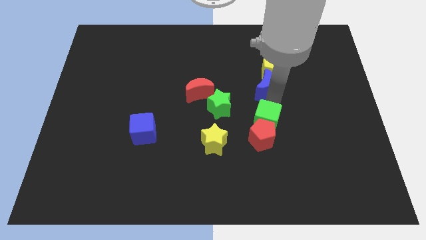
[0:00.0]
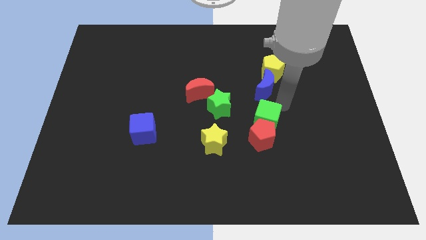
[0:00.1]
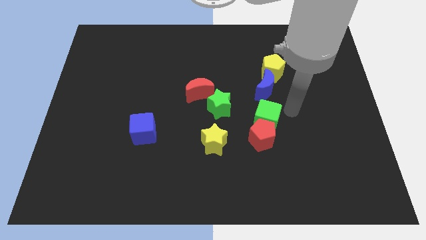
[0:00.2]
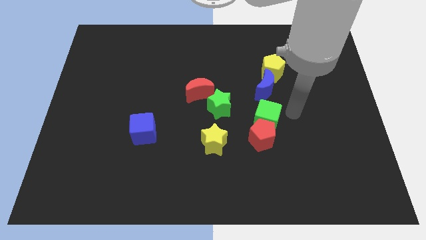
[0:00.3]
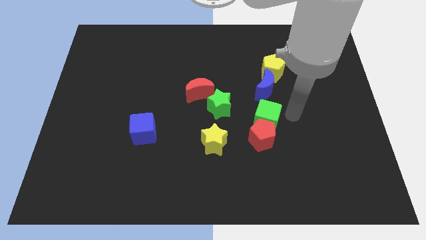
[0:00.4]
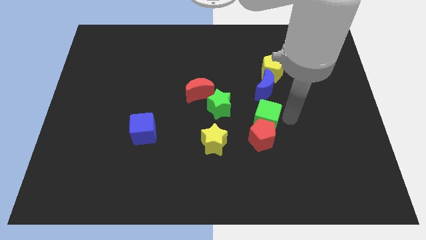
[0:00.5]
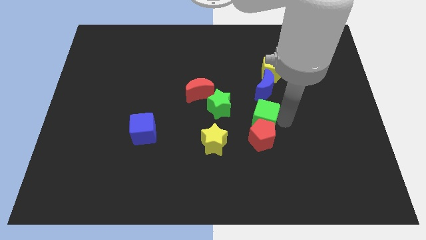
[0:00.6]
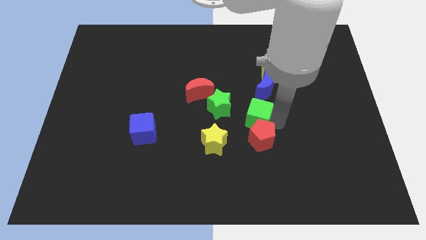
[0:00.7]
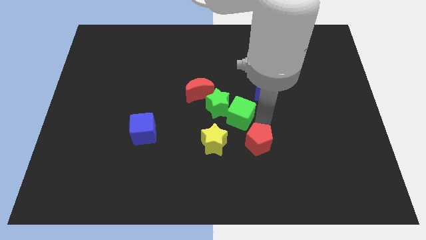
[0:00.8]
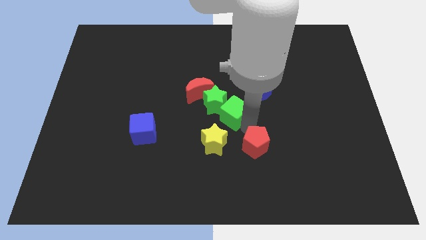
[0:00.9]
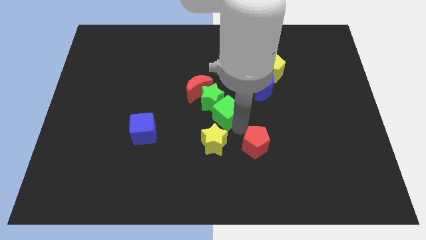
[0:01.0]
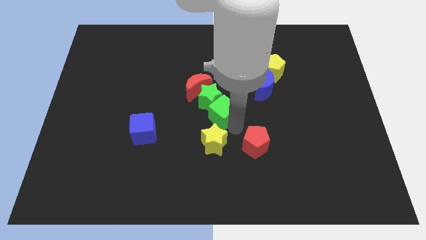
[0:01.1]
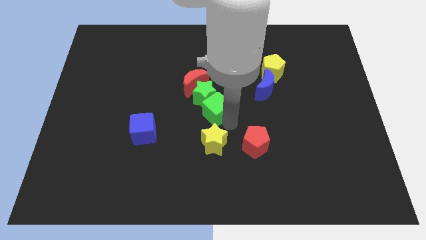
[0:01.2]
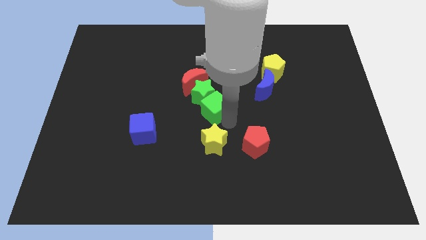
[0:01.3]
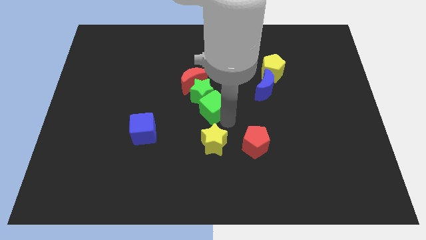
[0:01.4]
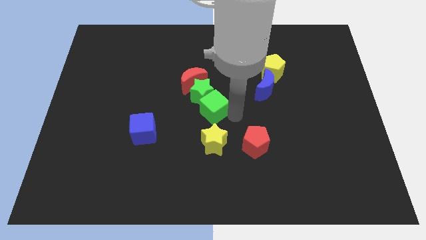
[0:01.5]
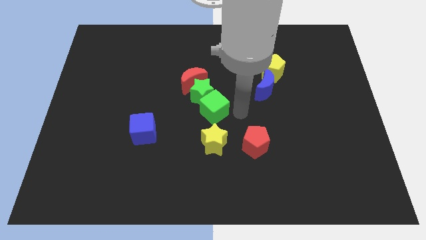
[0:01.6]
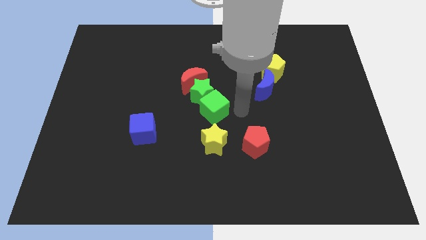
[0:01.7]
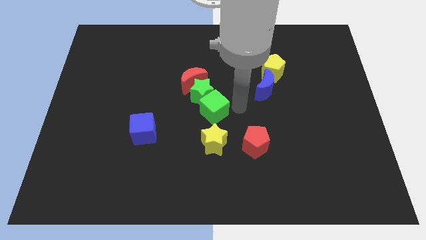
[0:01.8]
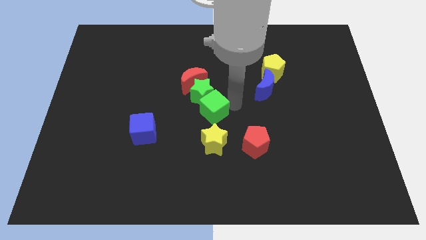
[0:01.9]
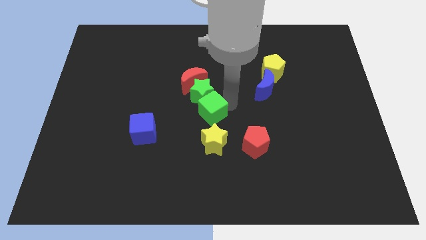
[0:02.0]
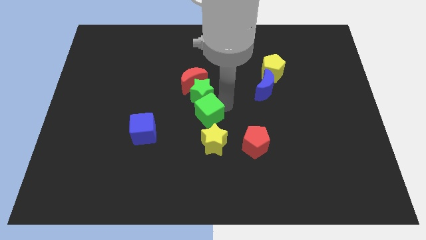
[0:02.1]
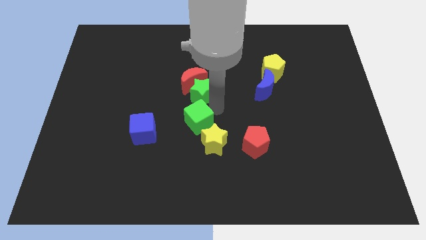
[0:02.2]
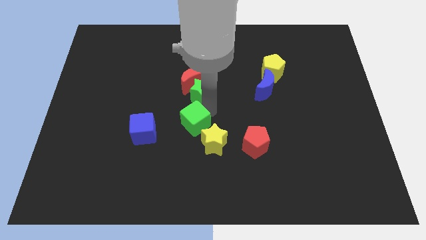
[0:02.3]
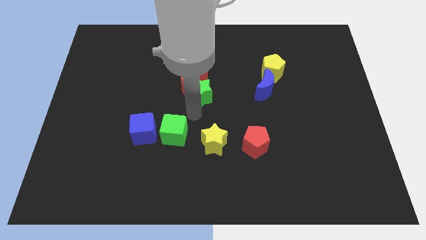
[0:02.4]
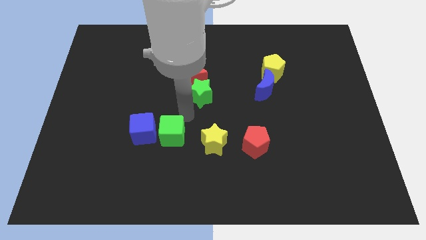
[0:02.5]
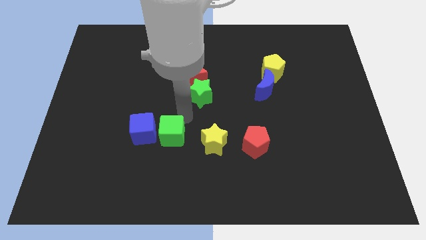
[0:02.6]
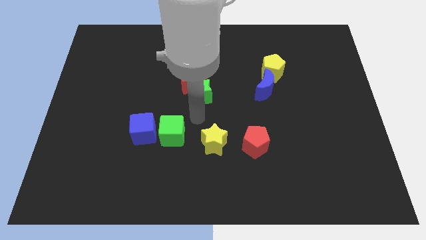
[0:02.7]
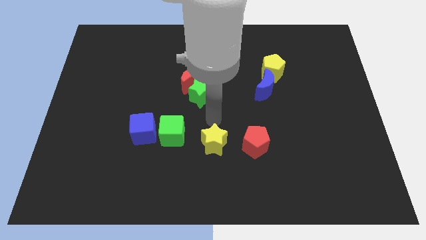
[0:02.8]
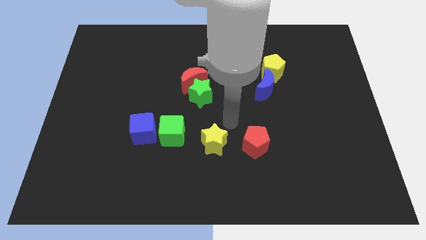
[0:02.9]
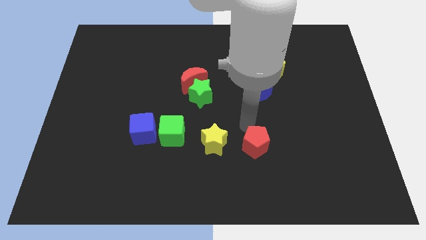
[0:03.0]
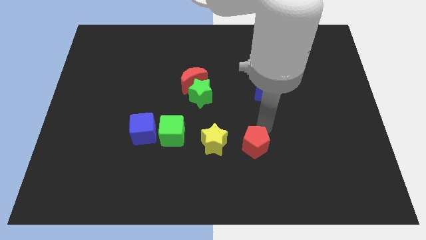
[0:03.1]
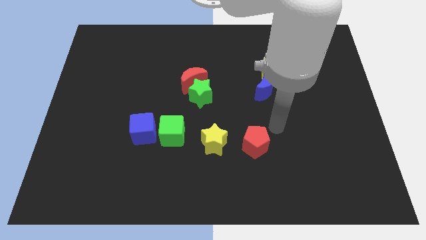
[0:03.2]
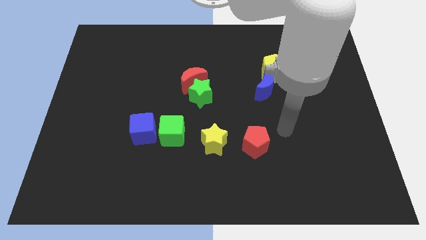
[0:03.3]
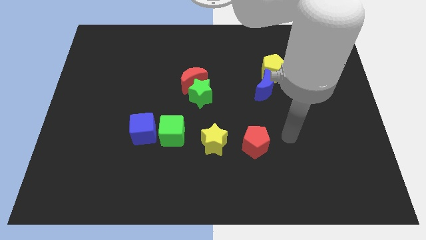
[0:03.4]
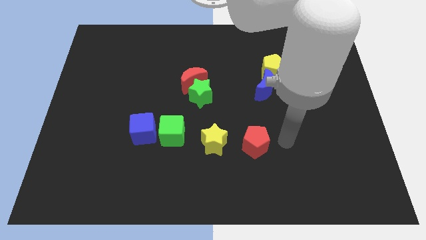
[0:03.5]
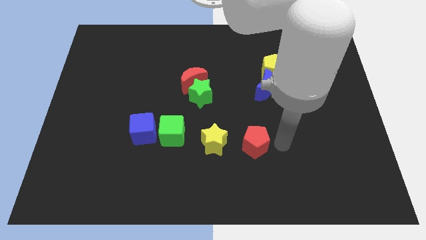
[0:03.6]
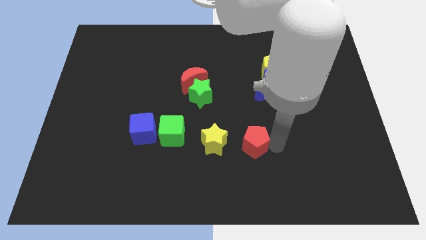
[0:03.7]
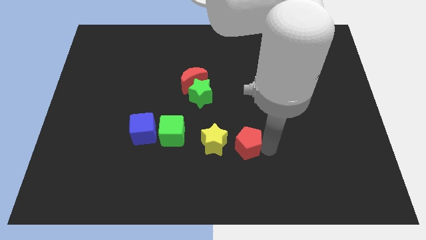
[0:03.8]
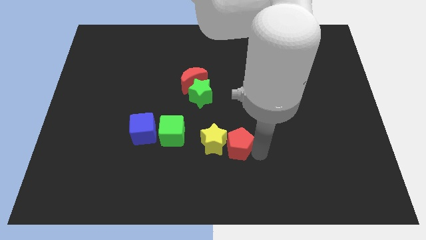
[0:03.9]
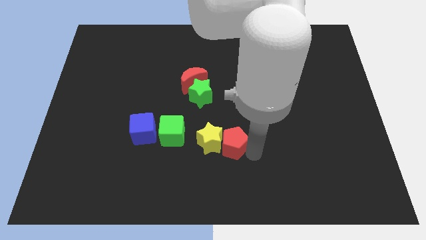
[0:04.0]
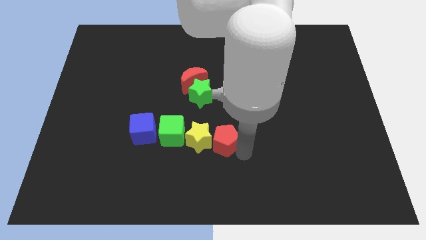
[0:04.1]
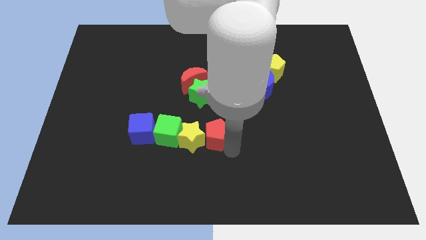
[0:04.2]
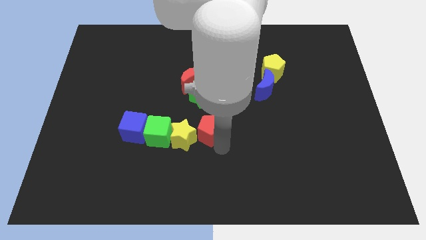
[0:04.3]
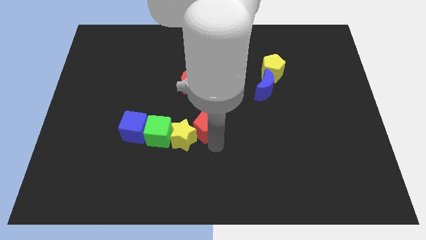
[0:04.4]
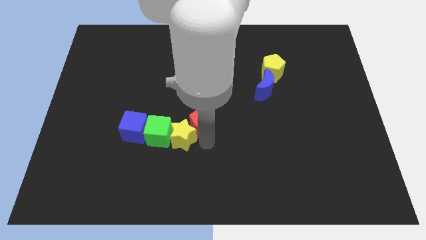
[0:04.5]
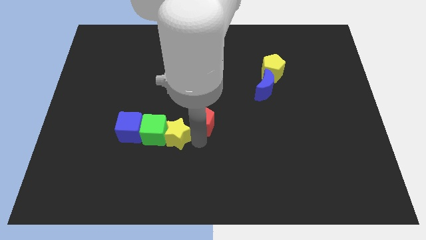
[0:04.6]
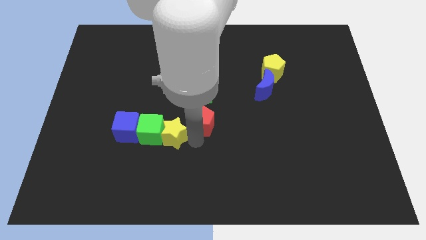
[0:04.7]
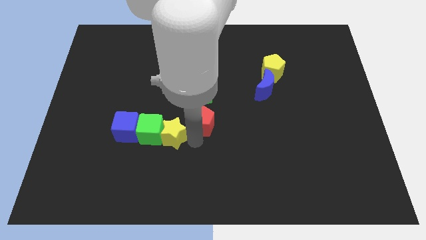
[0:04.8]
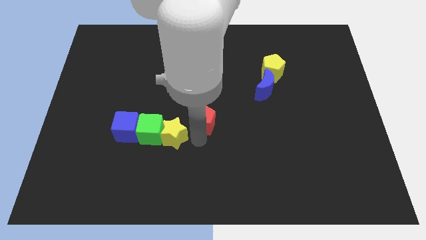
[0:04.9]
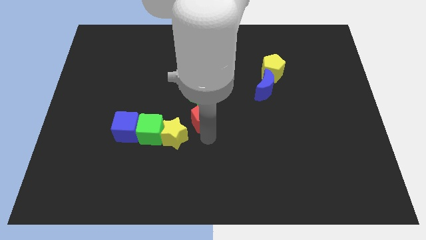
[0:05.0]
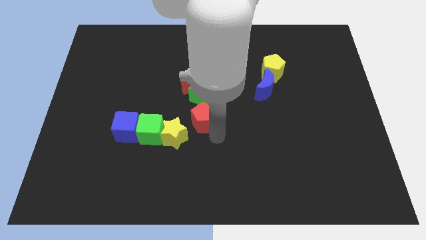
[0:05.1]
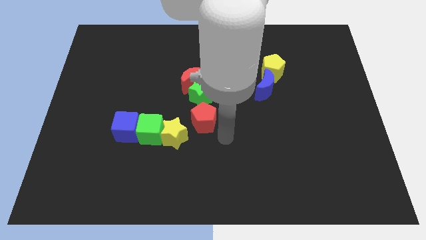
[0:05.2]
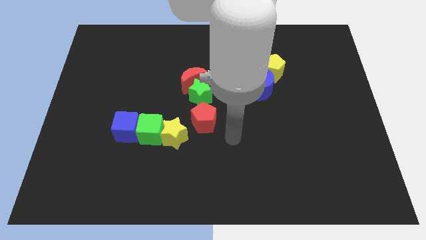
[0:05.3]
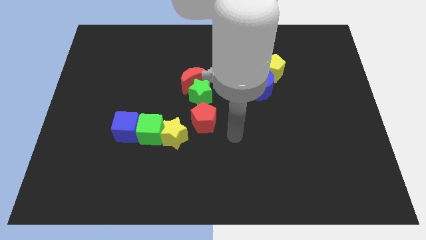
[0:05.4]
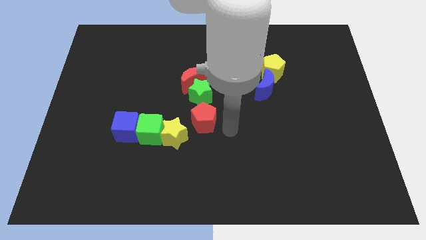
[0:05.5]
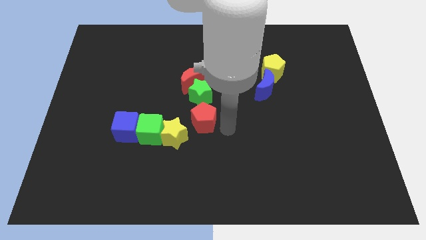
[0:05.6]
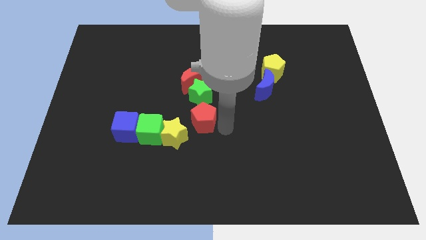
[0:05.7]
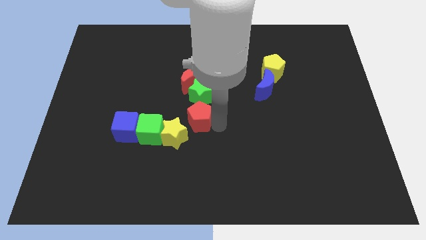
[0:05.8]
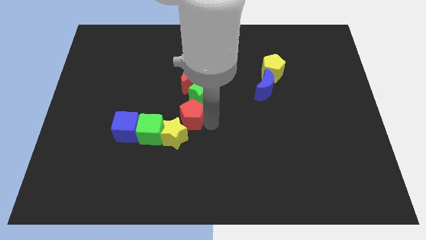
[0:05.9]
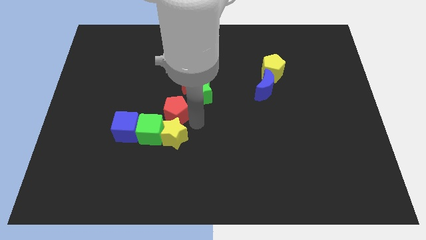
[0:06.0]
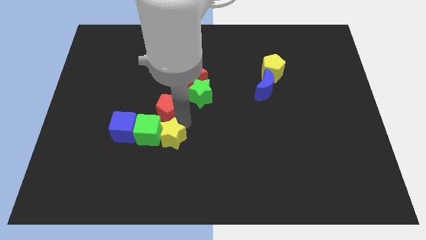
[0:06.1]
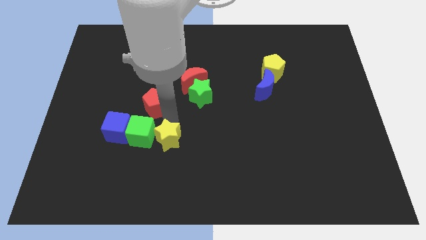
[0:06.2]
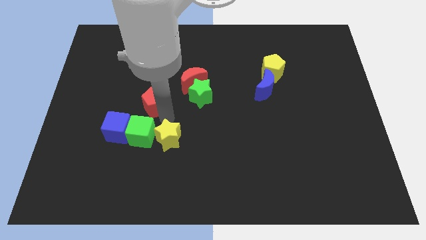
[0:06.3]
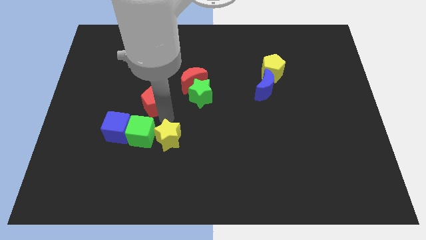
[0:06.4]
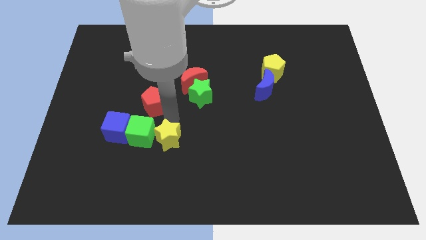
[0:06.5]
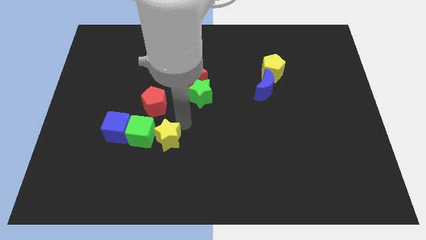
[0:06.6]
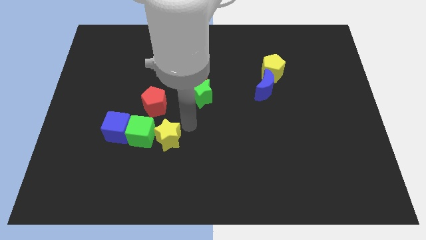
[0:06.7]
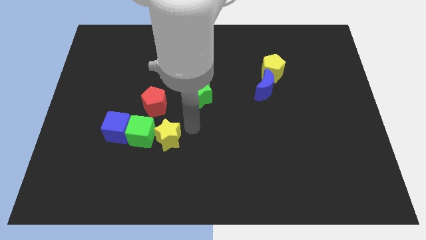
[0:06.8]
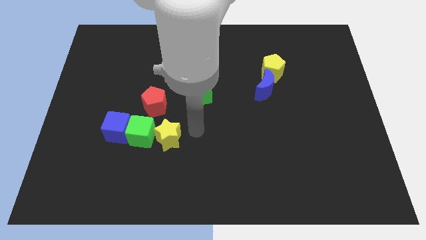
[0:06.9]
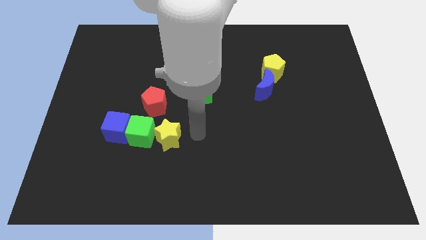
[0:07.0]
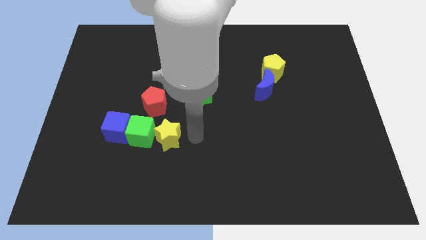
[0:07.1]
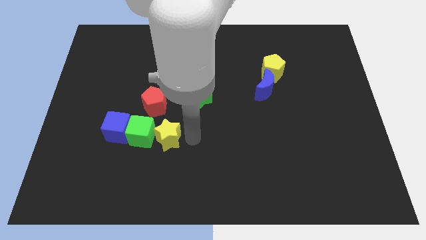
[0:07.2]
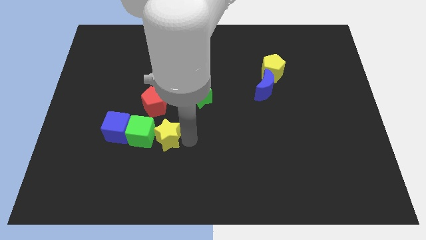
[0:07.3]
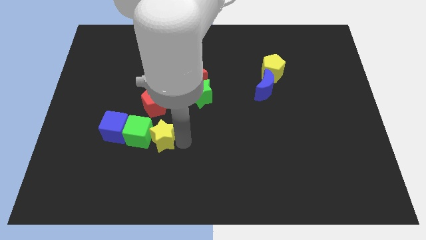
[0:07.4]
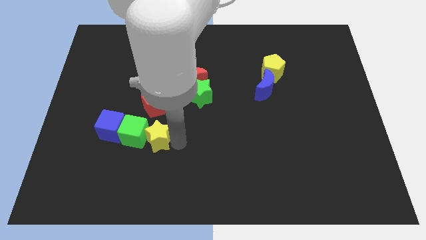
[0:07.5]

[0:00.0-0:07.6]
push a group of blocks to the left sidea

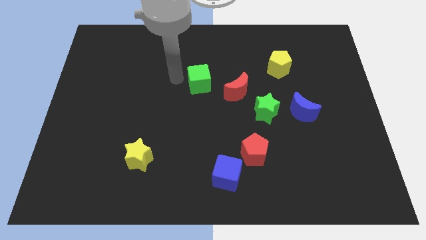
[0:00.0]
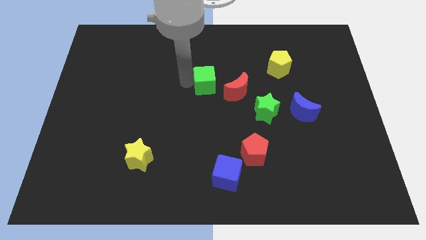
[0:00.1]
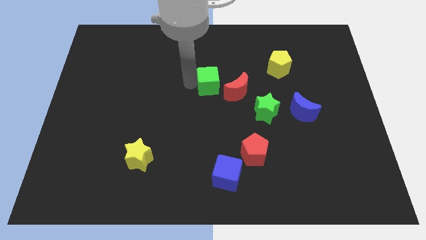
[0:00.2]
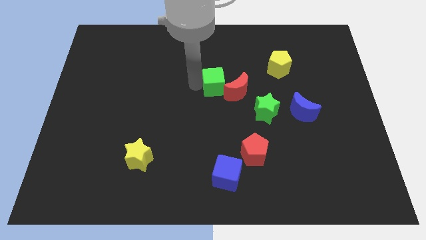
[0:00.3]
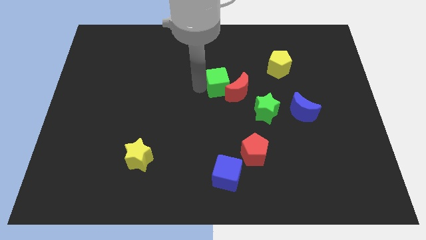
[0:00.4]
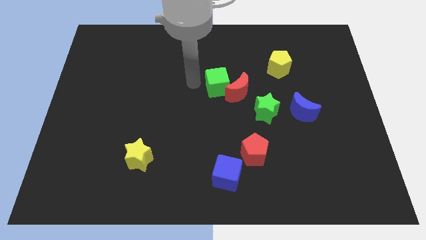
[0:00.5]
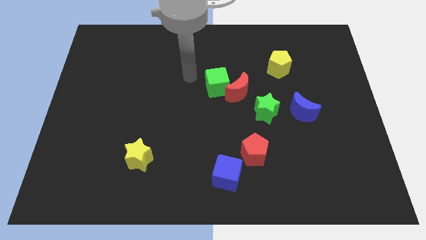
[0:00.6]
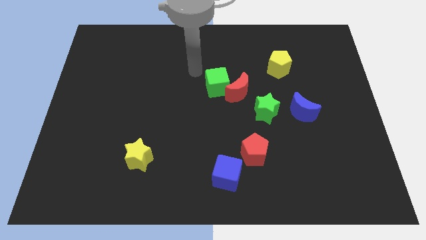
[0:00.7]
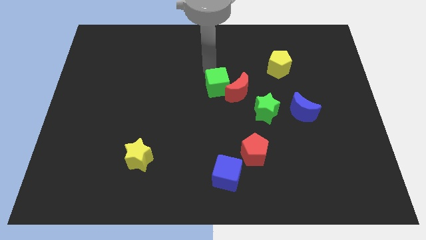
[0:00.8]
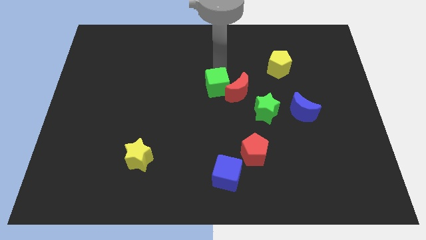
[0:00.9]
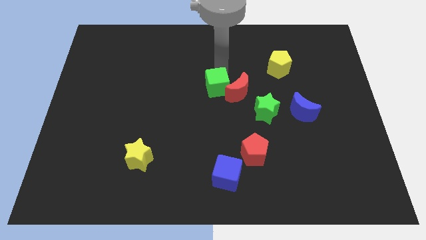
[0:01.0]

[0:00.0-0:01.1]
slide green cube into red moon

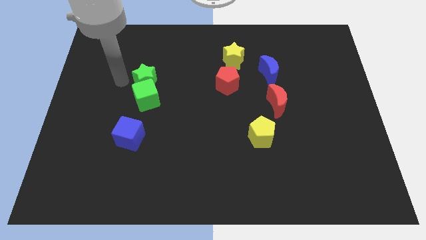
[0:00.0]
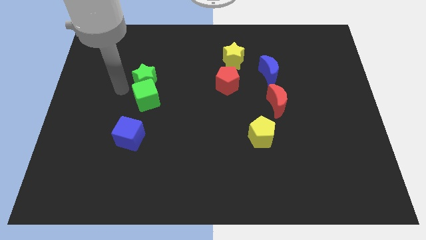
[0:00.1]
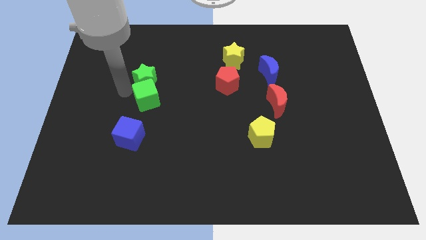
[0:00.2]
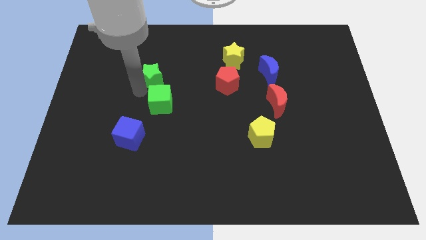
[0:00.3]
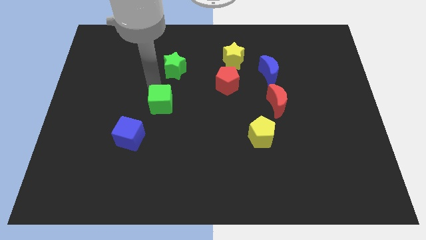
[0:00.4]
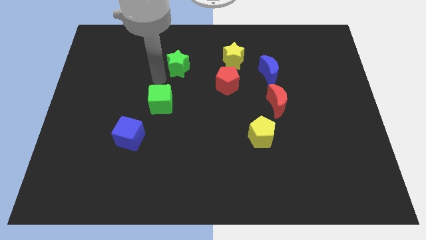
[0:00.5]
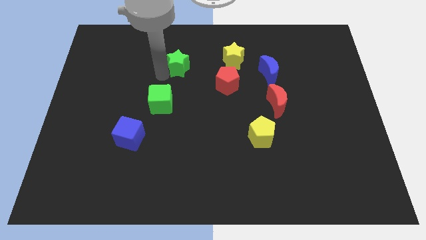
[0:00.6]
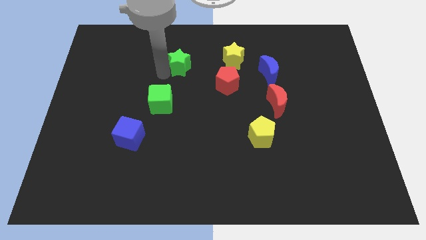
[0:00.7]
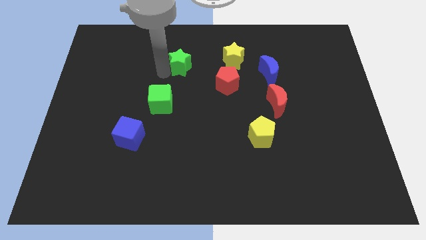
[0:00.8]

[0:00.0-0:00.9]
separate the group of green blocks
